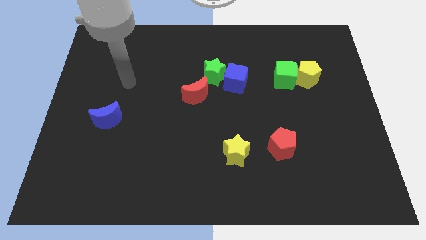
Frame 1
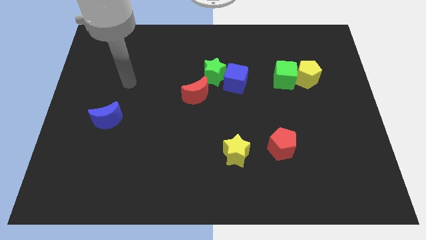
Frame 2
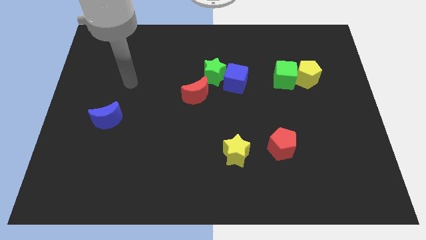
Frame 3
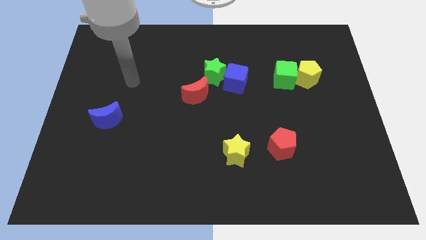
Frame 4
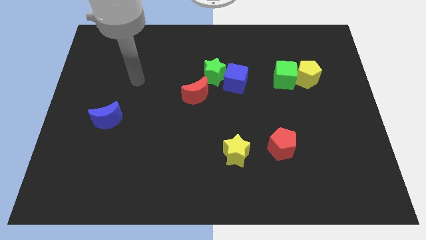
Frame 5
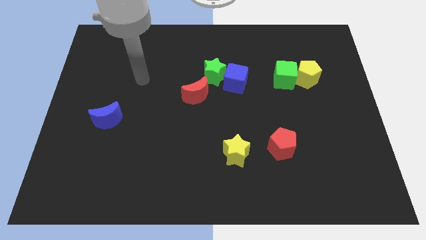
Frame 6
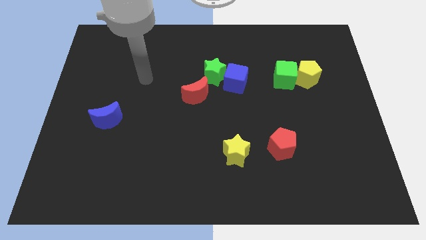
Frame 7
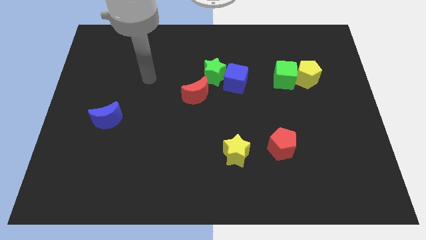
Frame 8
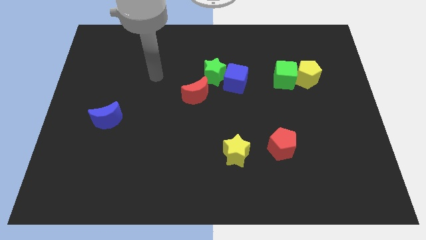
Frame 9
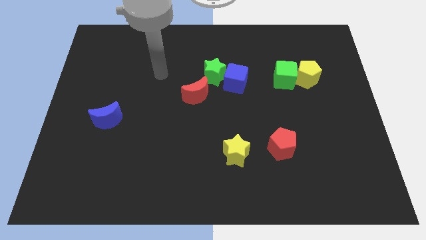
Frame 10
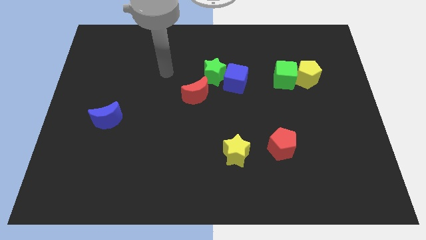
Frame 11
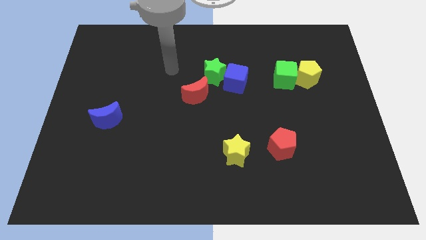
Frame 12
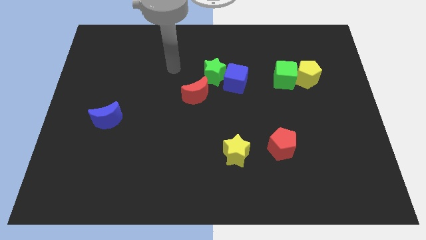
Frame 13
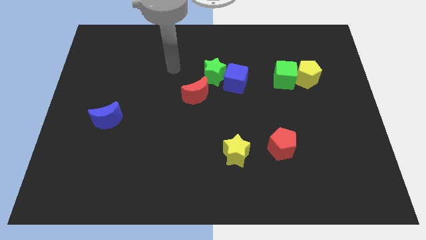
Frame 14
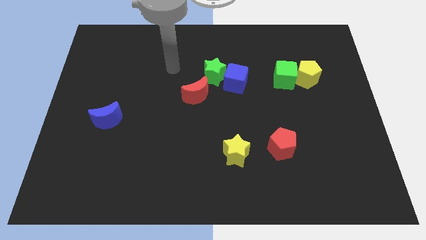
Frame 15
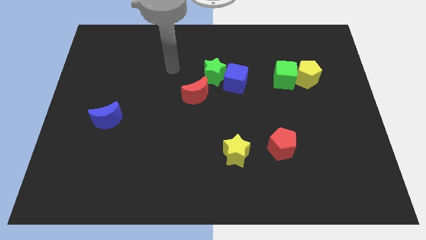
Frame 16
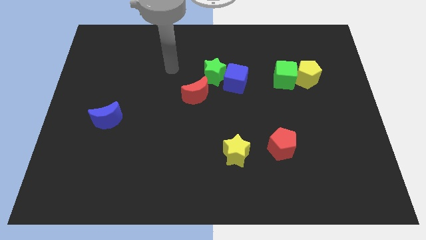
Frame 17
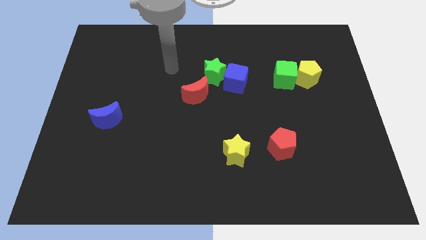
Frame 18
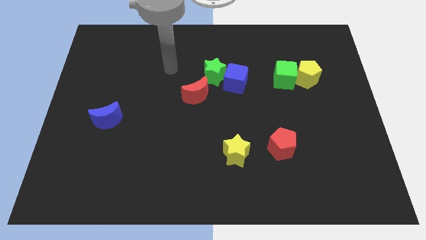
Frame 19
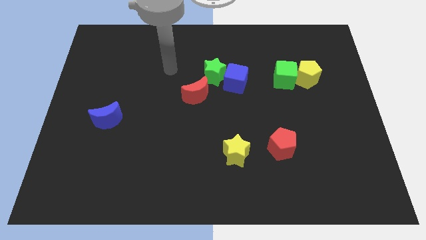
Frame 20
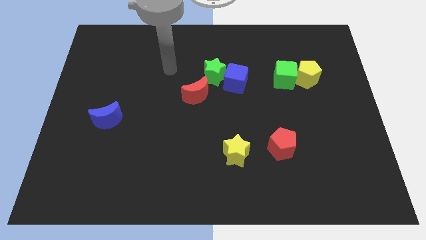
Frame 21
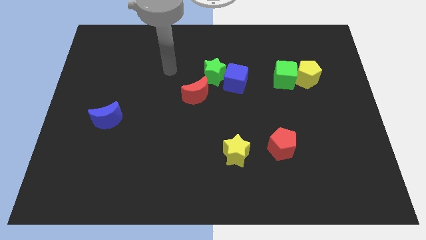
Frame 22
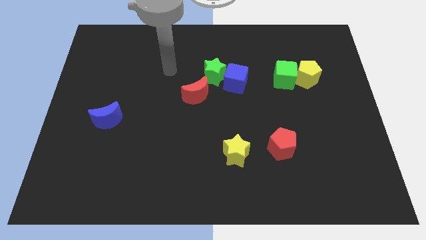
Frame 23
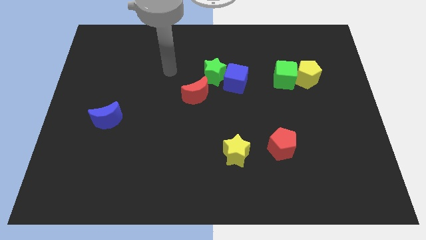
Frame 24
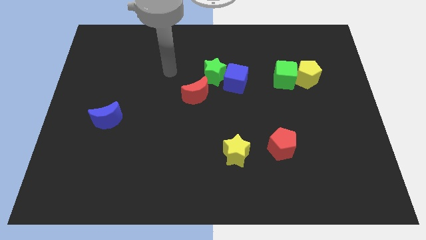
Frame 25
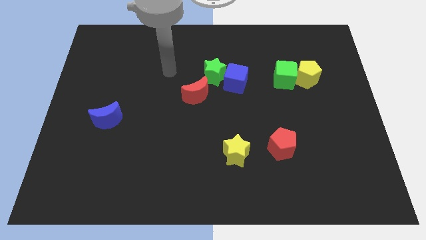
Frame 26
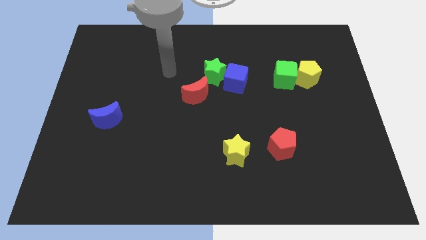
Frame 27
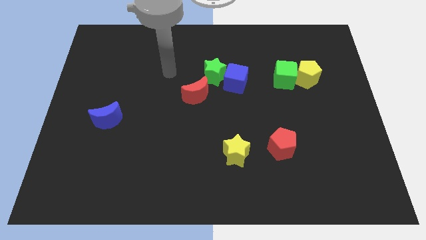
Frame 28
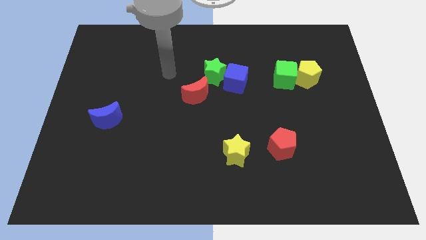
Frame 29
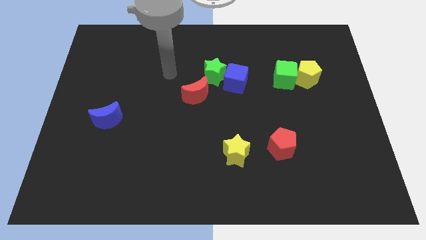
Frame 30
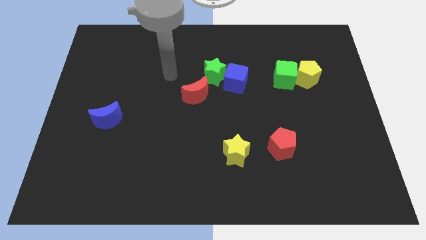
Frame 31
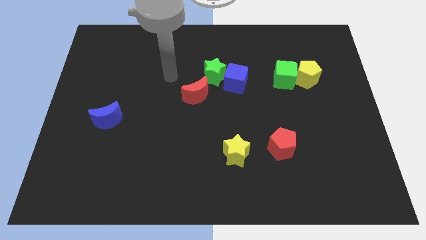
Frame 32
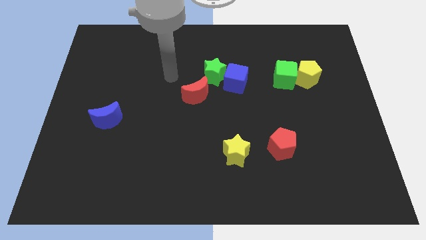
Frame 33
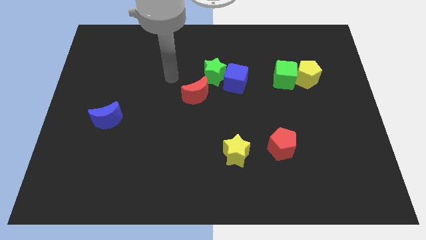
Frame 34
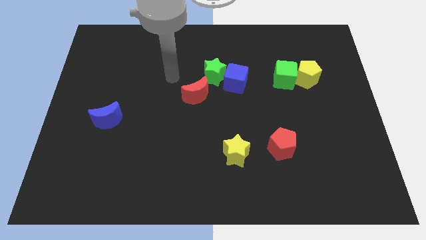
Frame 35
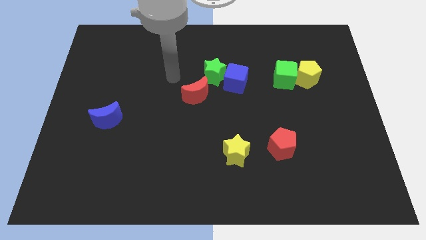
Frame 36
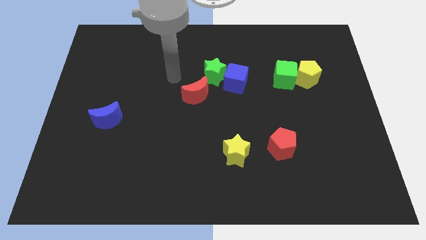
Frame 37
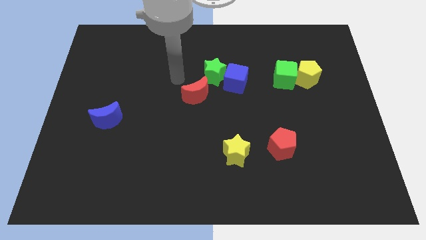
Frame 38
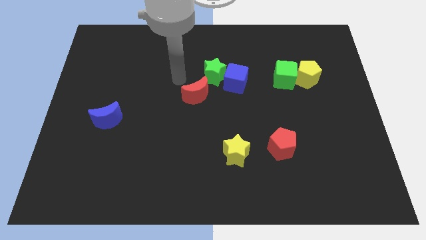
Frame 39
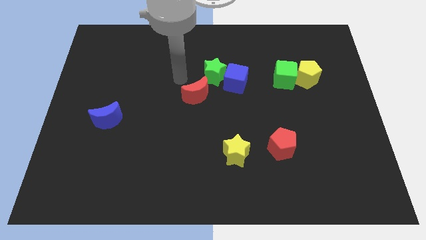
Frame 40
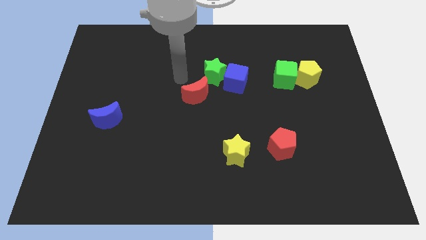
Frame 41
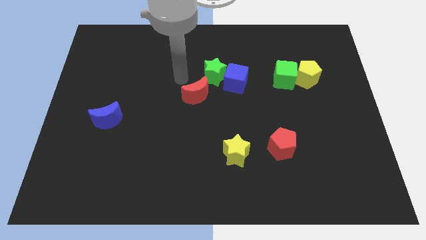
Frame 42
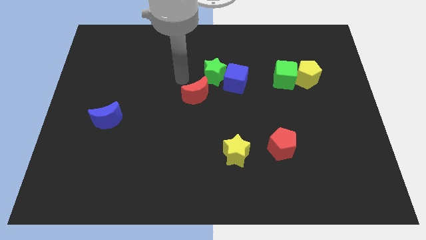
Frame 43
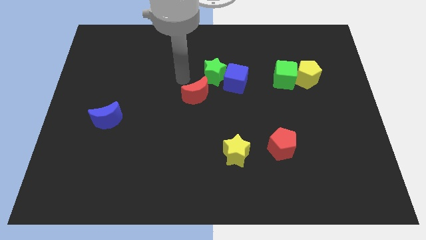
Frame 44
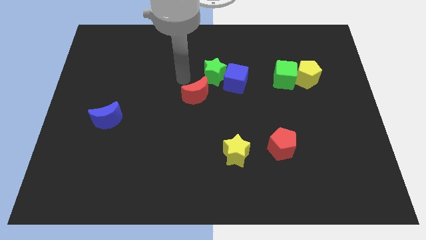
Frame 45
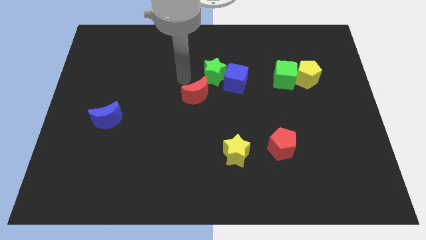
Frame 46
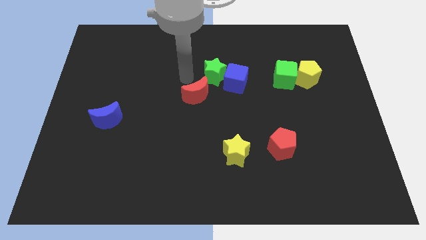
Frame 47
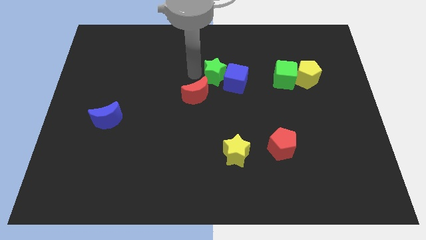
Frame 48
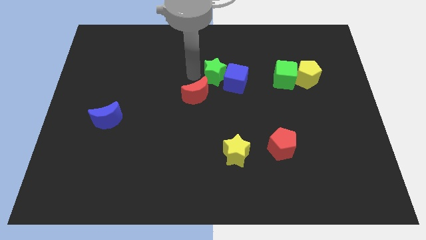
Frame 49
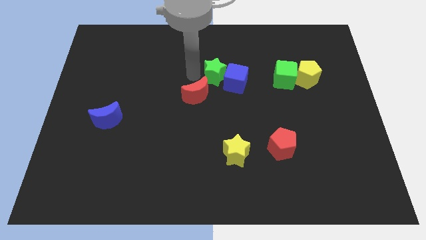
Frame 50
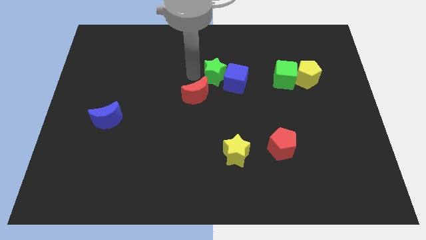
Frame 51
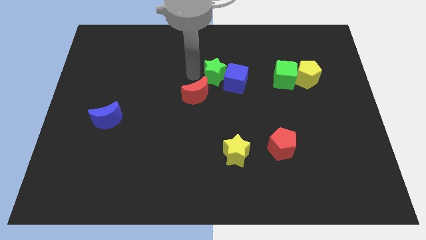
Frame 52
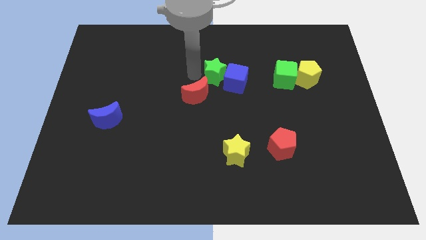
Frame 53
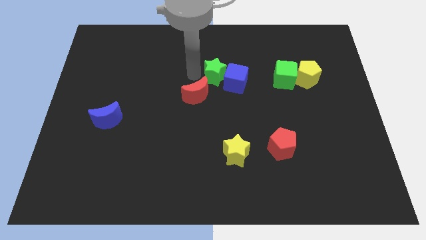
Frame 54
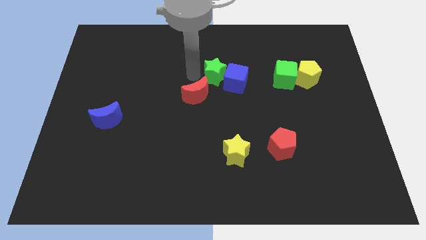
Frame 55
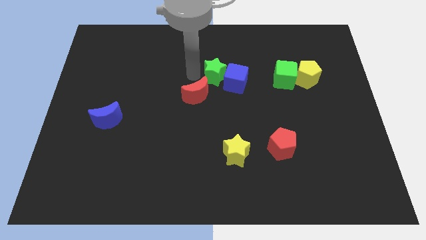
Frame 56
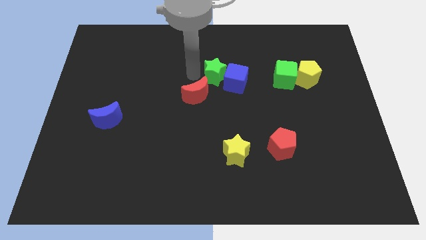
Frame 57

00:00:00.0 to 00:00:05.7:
move your arm left to the green star

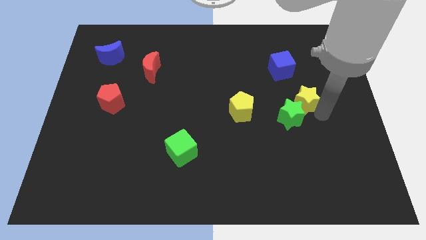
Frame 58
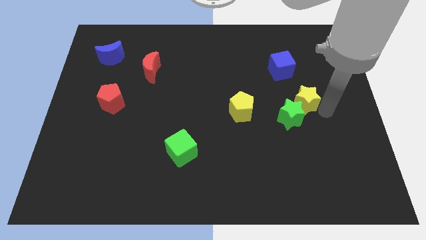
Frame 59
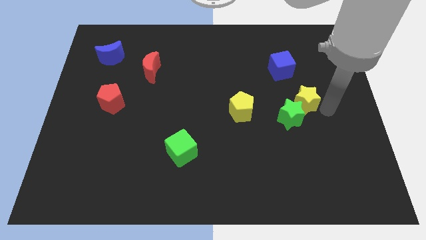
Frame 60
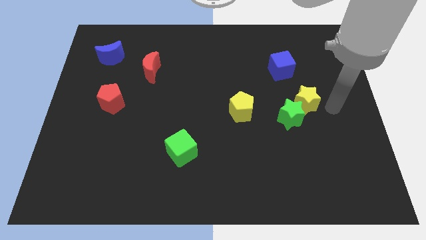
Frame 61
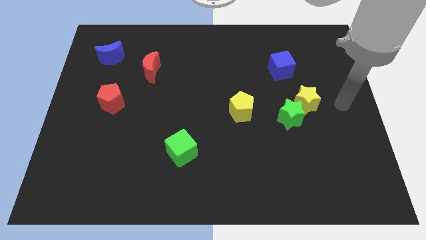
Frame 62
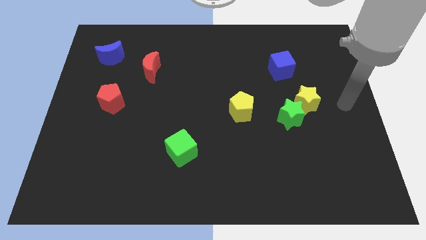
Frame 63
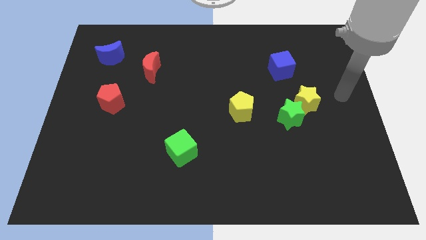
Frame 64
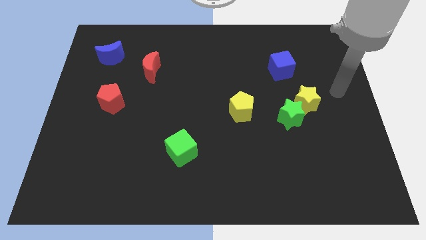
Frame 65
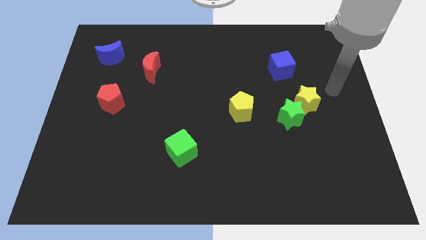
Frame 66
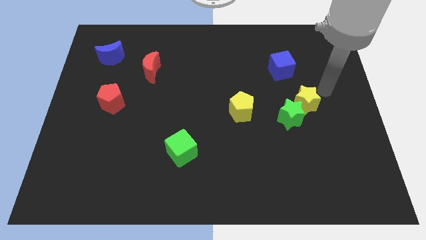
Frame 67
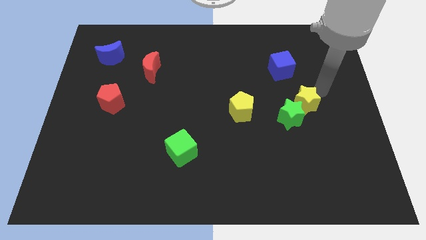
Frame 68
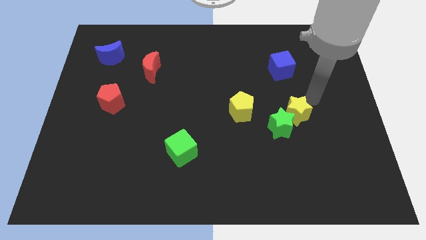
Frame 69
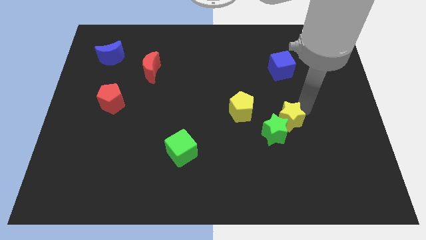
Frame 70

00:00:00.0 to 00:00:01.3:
push the yellow and green stars towards the bottom

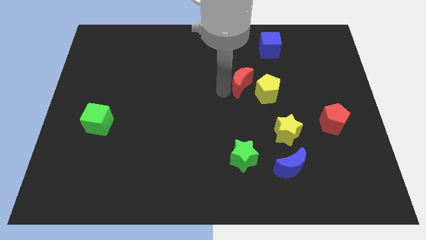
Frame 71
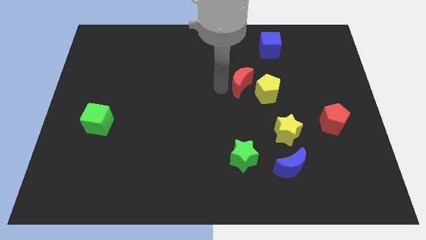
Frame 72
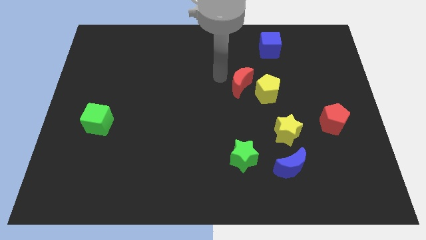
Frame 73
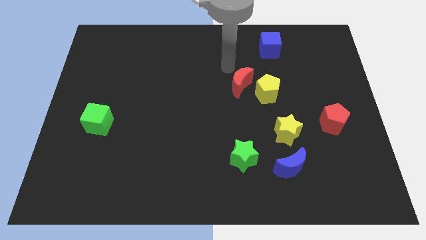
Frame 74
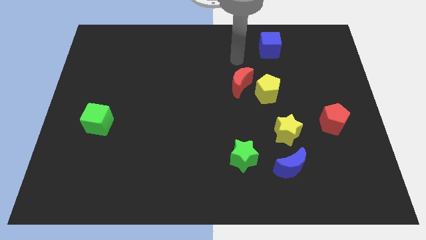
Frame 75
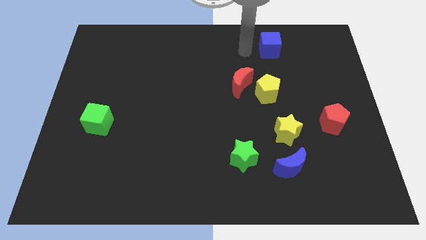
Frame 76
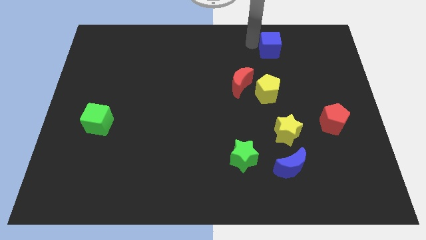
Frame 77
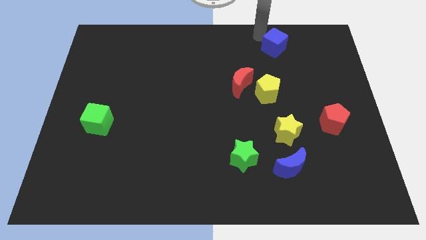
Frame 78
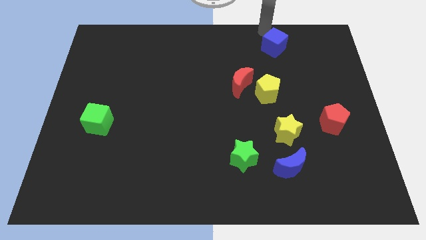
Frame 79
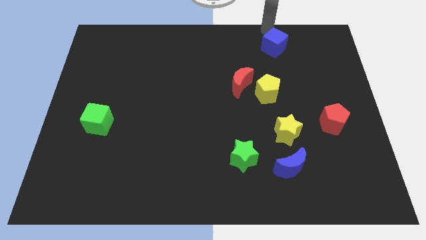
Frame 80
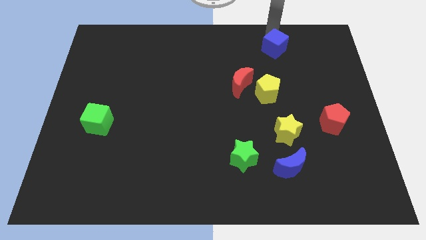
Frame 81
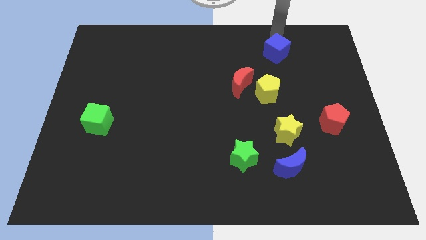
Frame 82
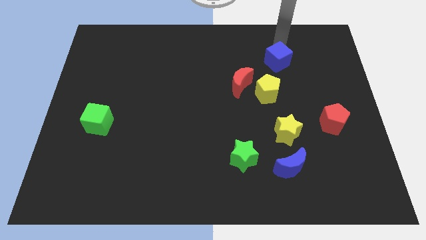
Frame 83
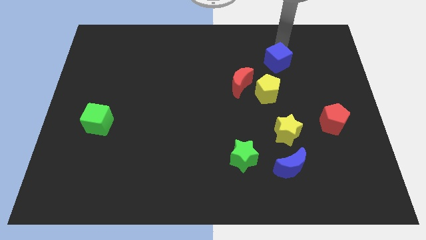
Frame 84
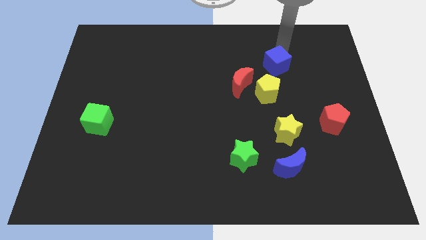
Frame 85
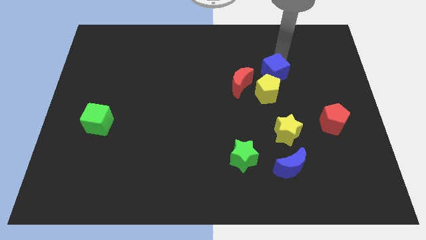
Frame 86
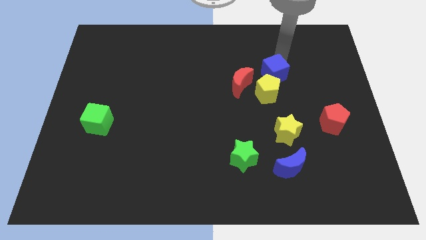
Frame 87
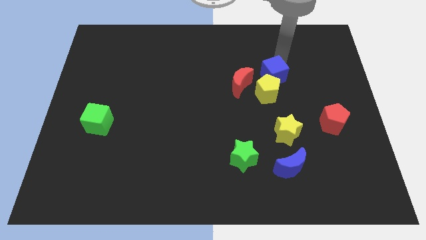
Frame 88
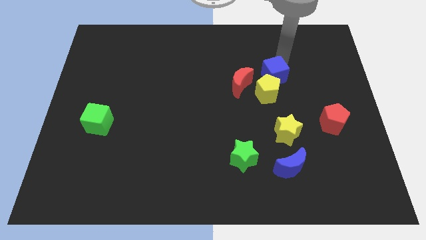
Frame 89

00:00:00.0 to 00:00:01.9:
push the blue cube closer to the yellow pentagon
